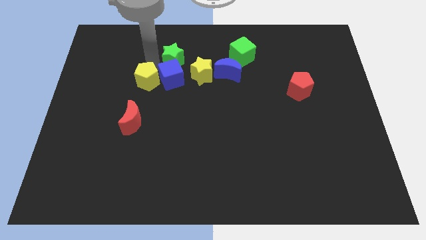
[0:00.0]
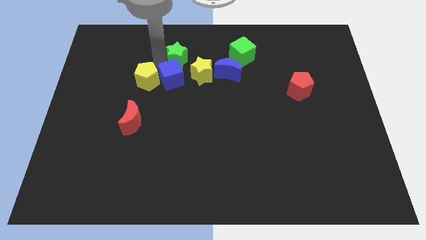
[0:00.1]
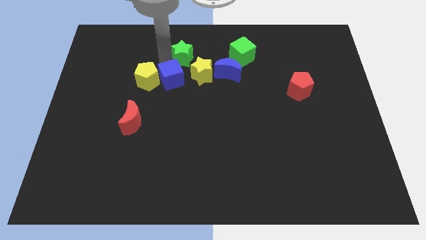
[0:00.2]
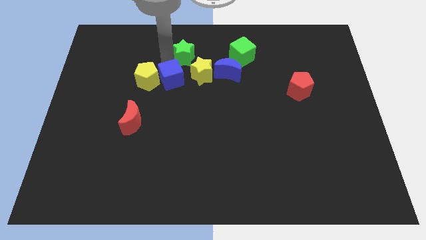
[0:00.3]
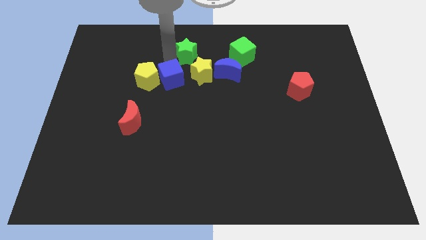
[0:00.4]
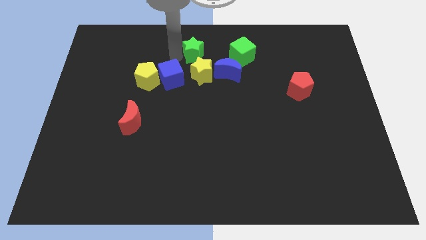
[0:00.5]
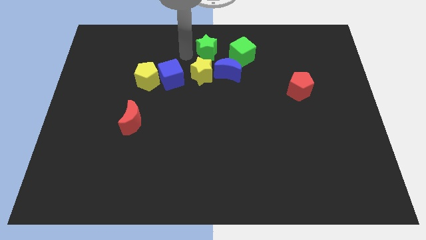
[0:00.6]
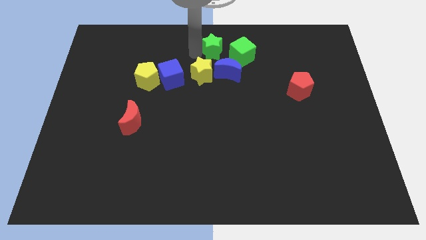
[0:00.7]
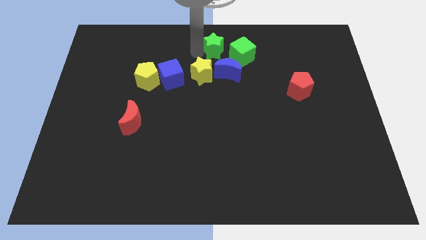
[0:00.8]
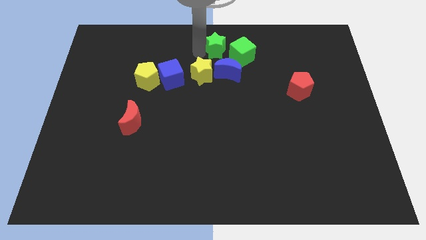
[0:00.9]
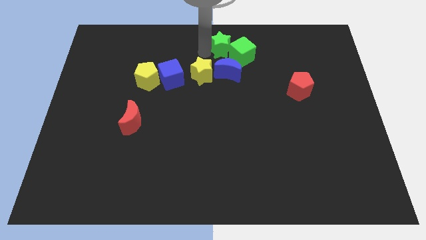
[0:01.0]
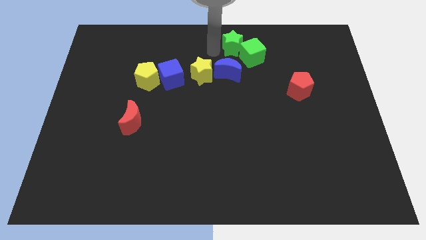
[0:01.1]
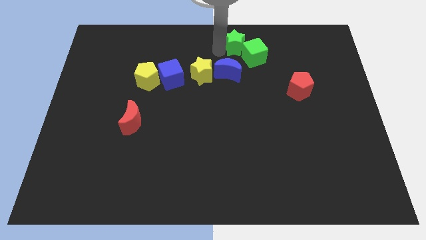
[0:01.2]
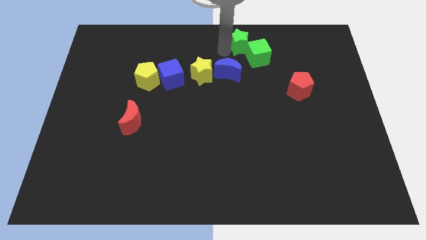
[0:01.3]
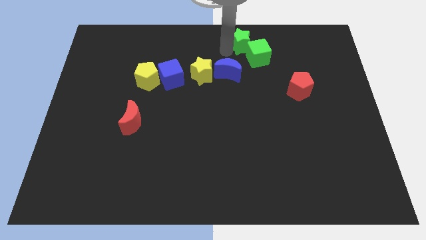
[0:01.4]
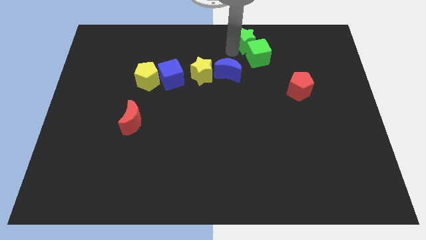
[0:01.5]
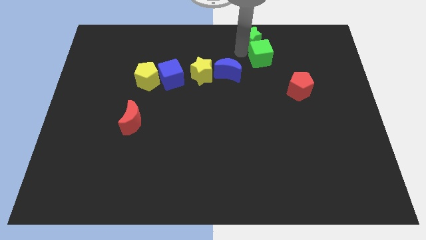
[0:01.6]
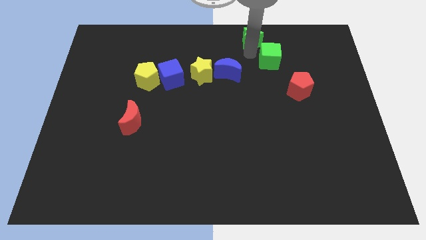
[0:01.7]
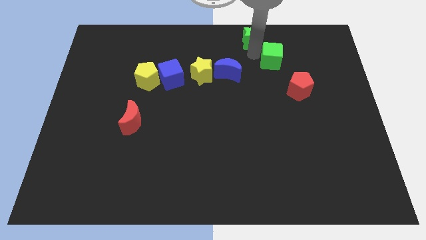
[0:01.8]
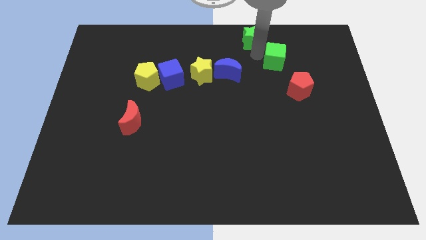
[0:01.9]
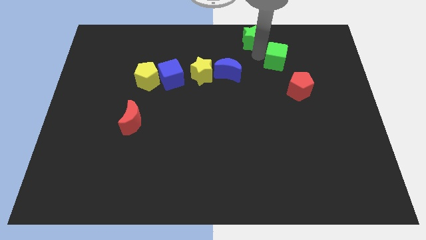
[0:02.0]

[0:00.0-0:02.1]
move the green blocks towards the top right side of the board

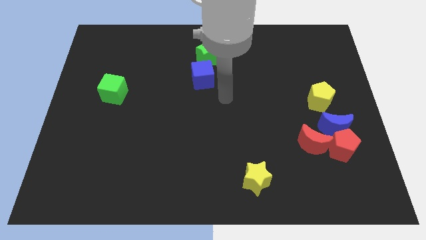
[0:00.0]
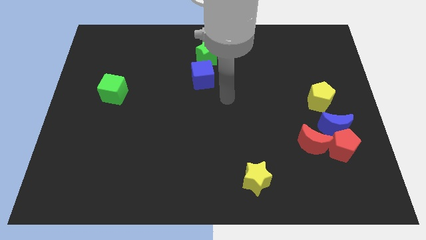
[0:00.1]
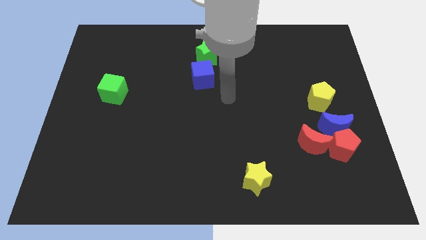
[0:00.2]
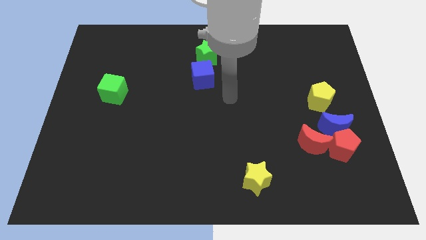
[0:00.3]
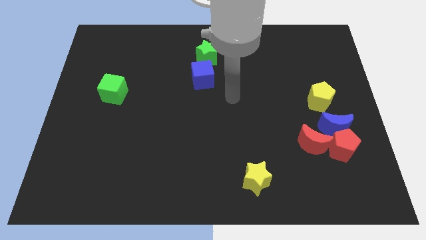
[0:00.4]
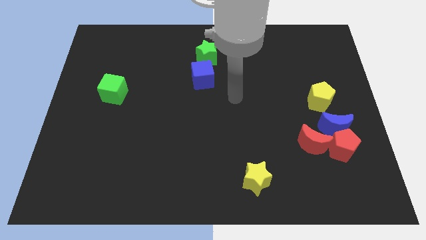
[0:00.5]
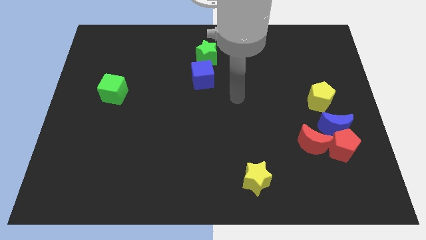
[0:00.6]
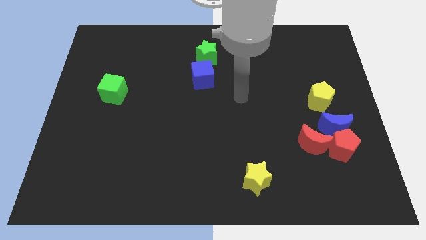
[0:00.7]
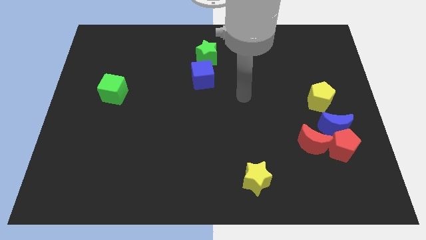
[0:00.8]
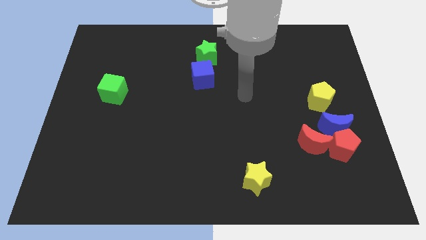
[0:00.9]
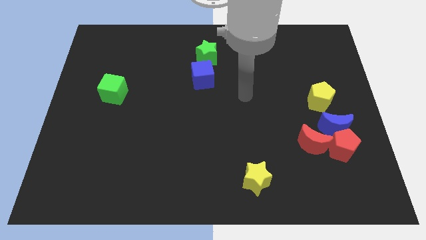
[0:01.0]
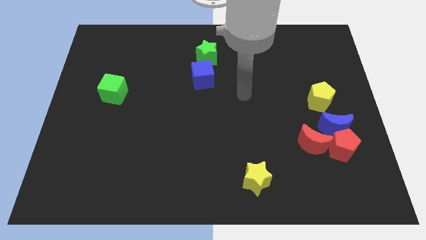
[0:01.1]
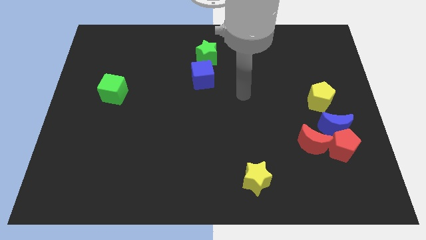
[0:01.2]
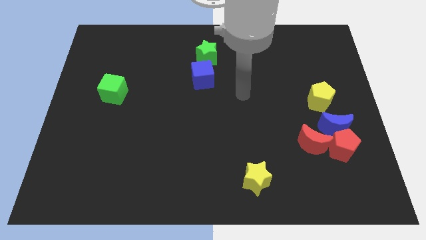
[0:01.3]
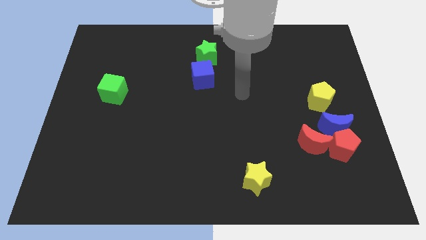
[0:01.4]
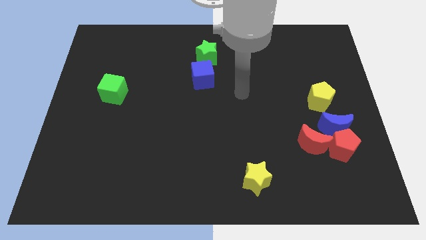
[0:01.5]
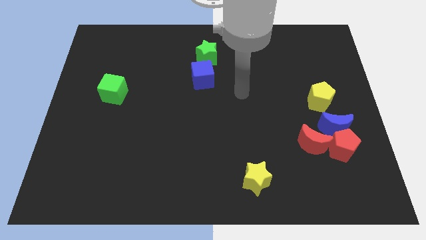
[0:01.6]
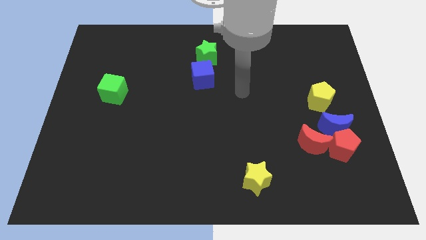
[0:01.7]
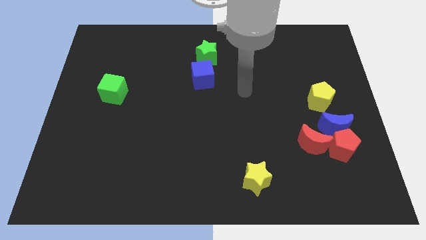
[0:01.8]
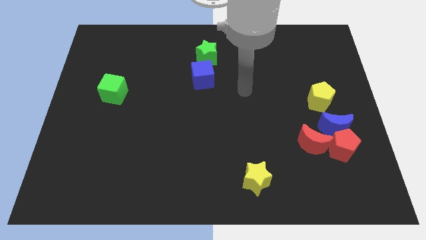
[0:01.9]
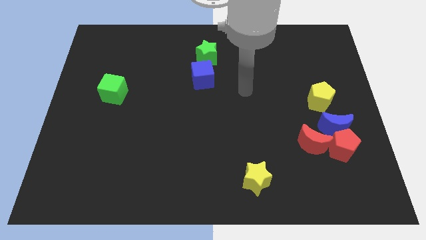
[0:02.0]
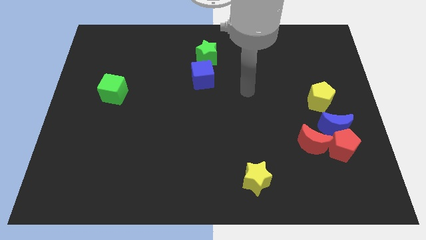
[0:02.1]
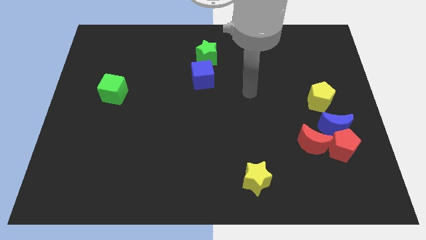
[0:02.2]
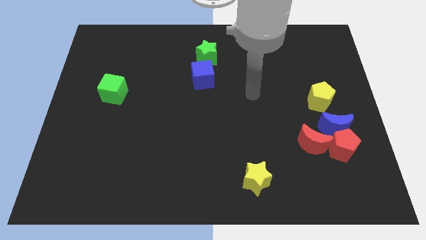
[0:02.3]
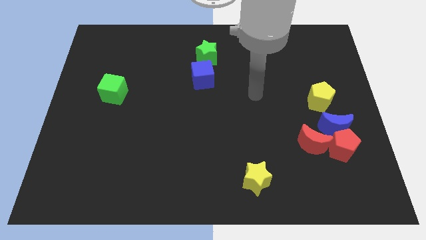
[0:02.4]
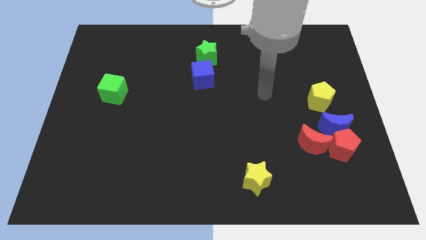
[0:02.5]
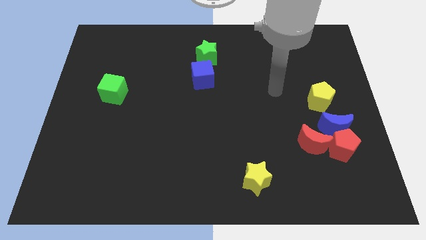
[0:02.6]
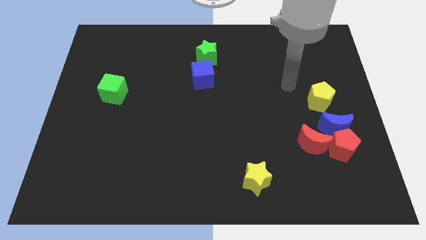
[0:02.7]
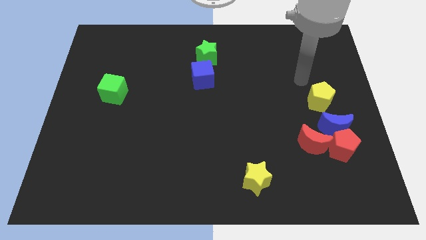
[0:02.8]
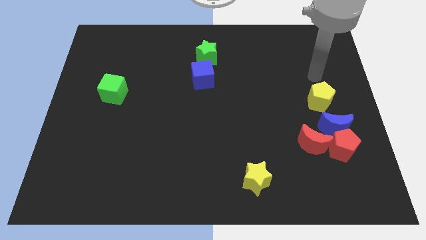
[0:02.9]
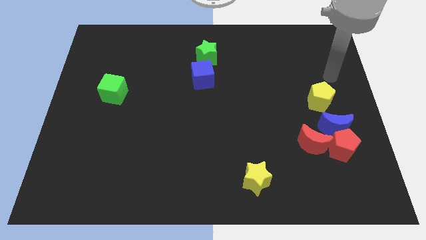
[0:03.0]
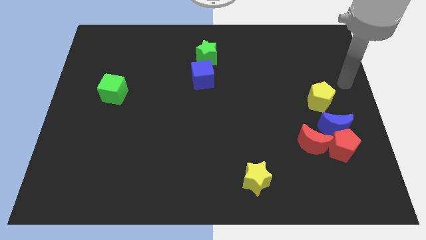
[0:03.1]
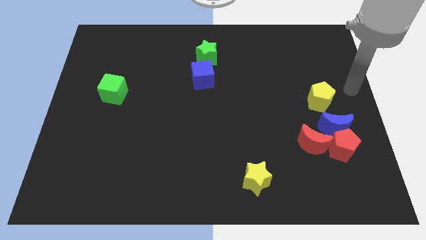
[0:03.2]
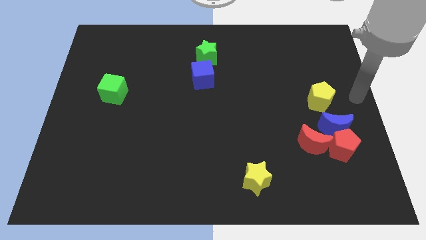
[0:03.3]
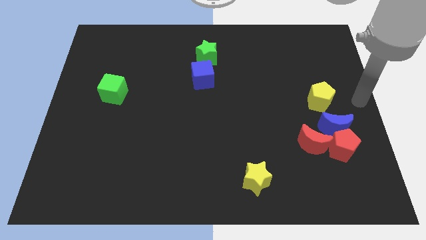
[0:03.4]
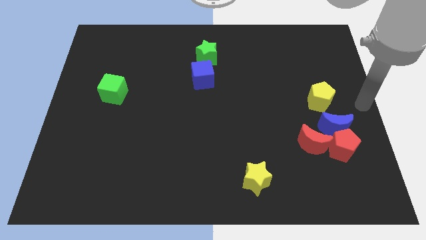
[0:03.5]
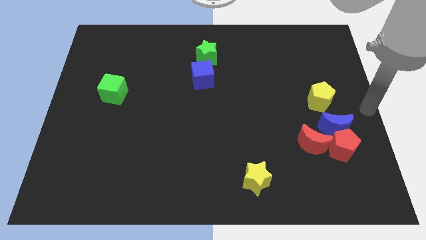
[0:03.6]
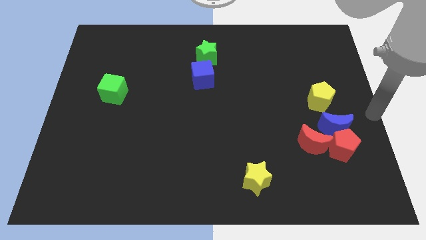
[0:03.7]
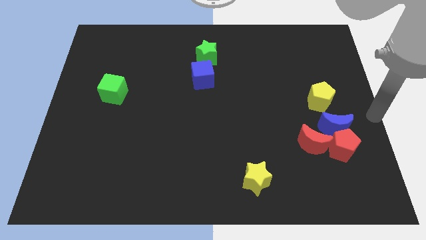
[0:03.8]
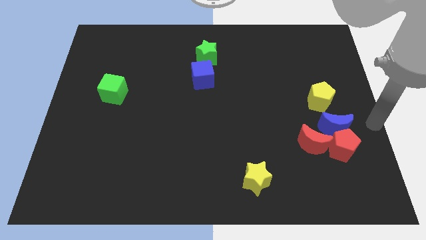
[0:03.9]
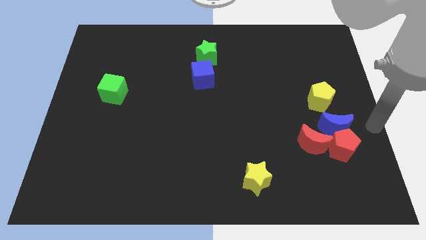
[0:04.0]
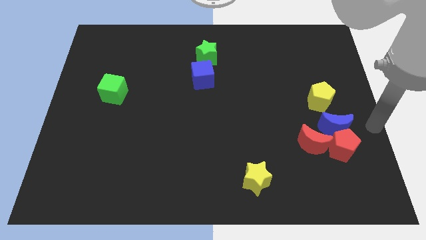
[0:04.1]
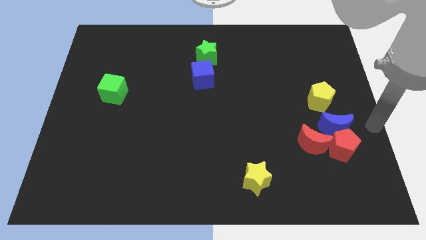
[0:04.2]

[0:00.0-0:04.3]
move your arm to the right side of the blue moon

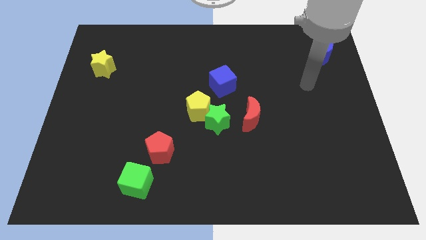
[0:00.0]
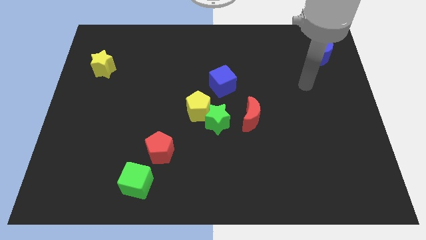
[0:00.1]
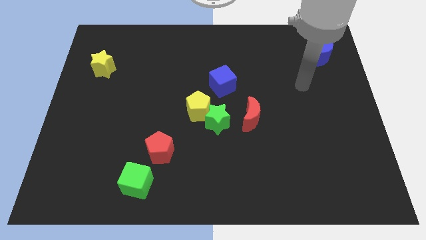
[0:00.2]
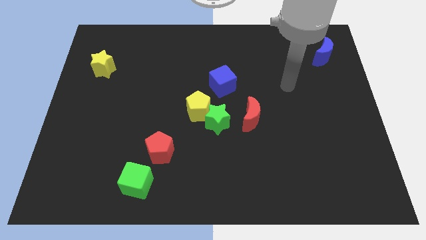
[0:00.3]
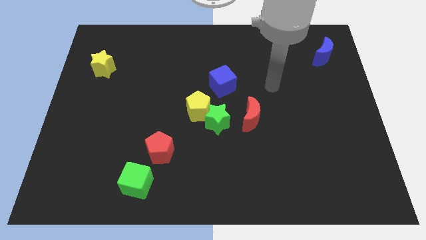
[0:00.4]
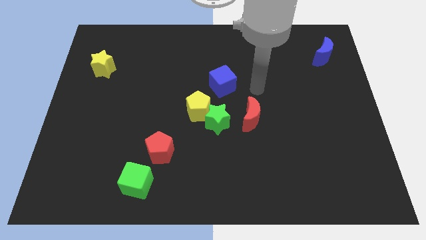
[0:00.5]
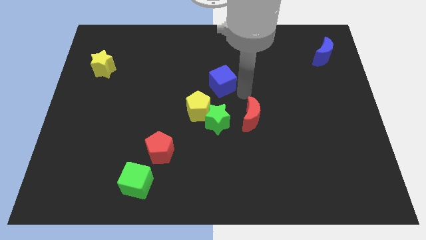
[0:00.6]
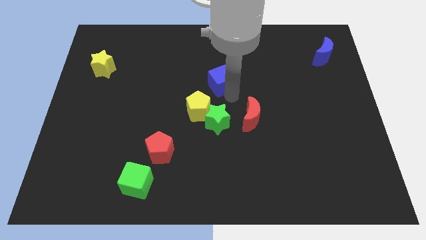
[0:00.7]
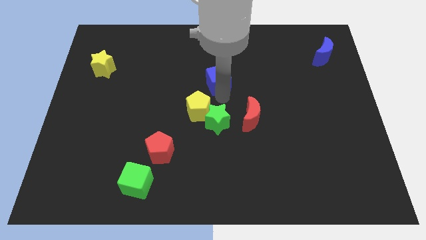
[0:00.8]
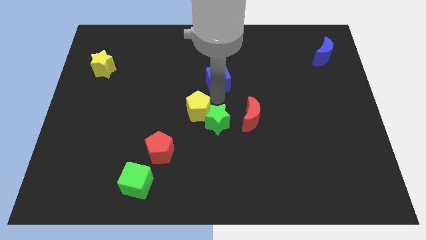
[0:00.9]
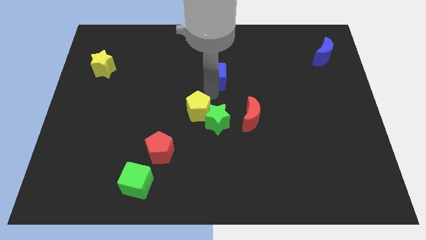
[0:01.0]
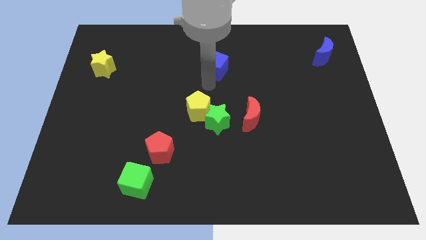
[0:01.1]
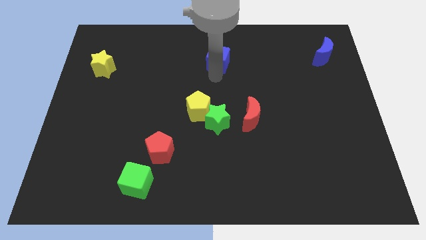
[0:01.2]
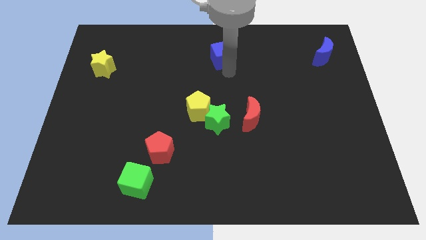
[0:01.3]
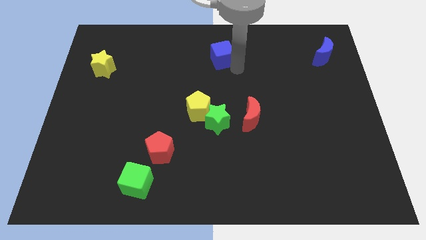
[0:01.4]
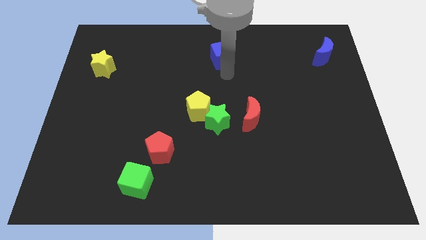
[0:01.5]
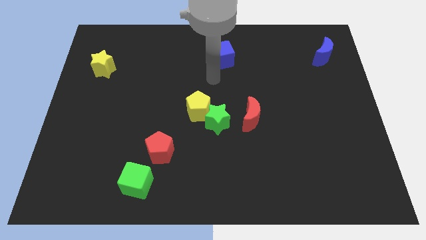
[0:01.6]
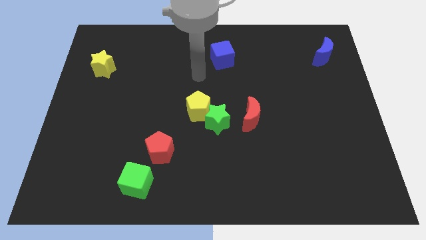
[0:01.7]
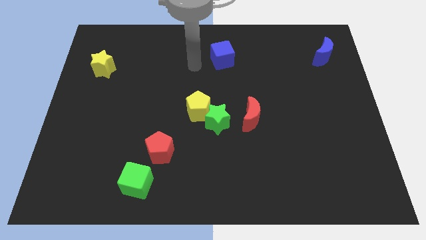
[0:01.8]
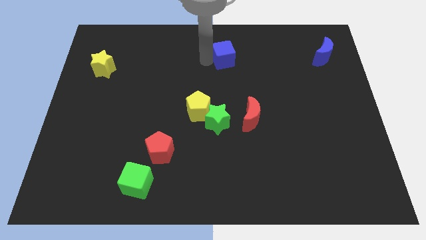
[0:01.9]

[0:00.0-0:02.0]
push the blue cube towards top side

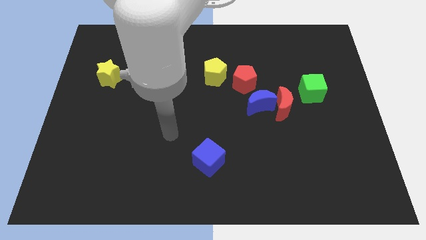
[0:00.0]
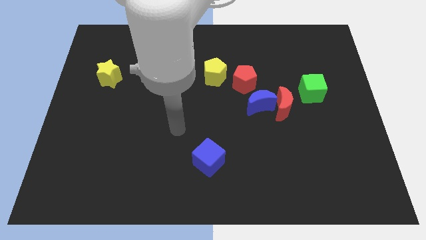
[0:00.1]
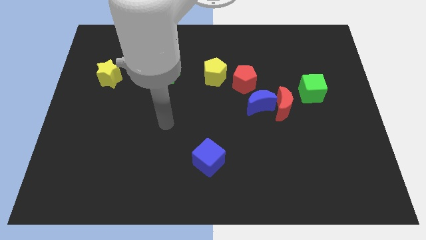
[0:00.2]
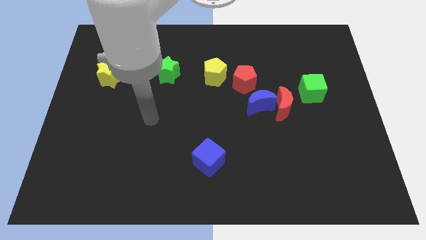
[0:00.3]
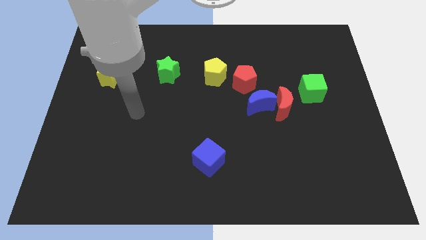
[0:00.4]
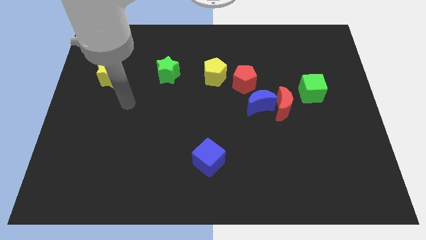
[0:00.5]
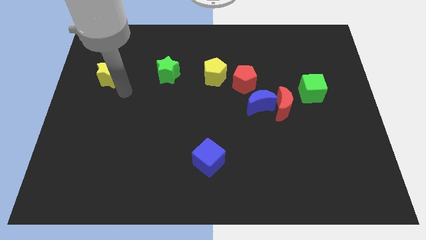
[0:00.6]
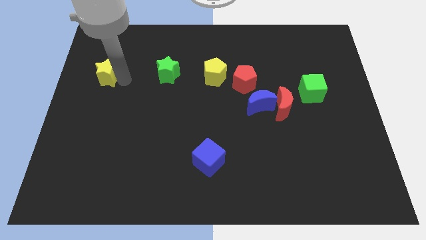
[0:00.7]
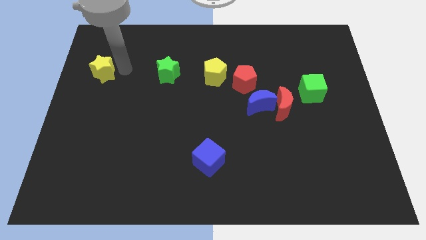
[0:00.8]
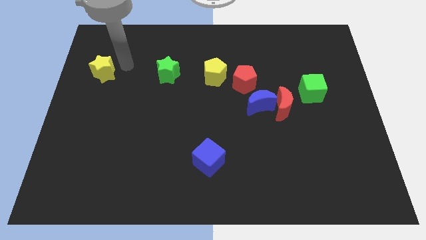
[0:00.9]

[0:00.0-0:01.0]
push the yellow star left to the green star
